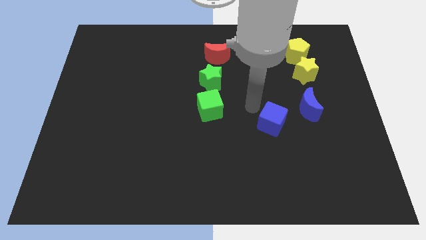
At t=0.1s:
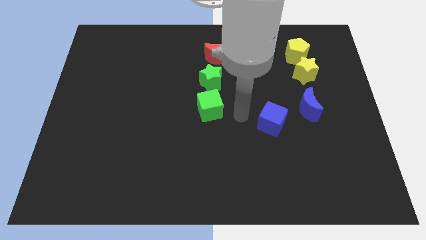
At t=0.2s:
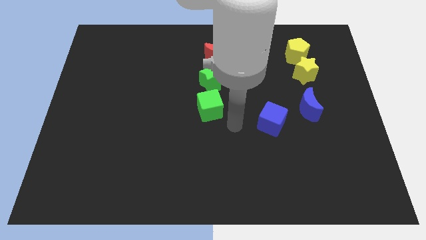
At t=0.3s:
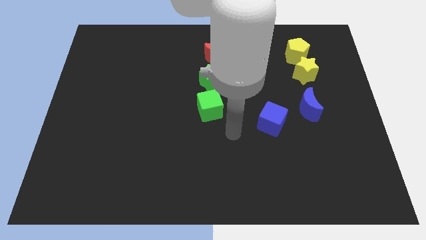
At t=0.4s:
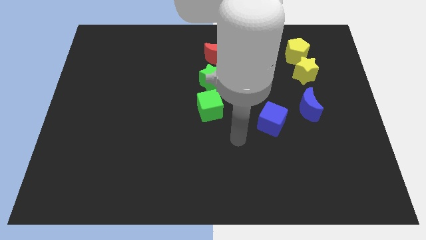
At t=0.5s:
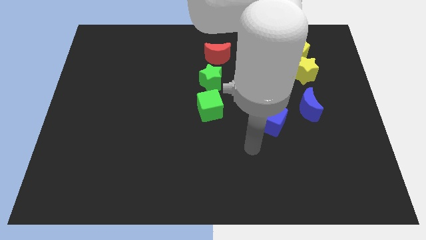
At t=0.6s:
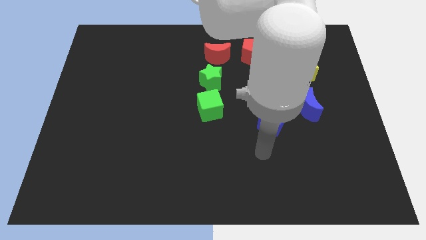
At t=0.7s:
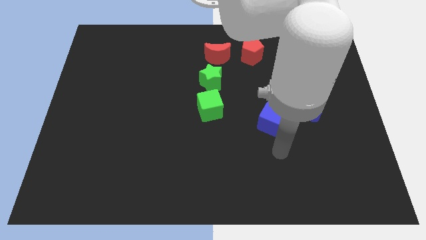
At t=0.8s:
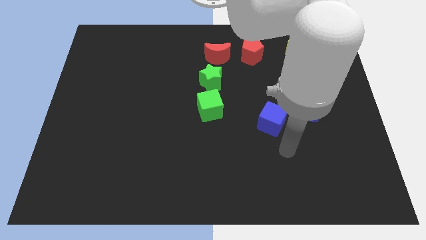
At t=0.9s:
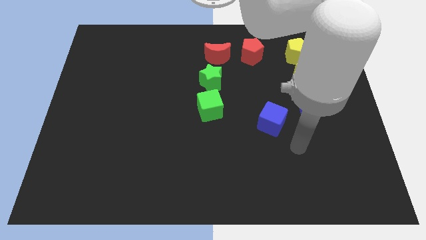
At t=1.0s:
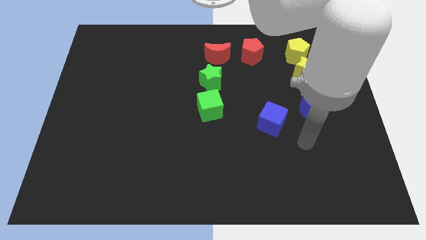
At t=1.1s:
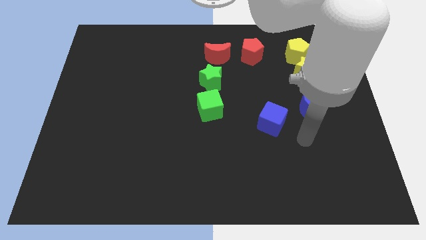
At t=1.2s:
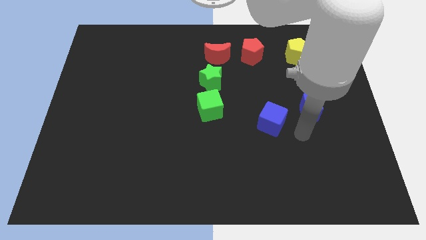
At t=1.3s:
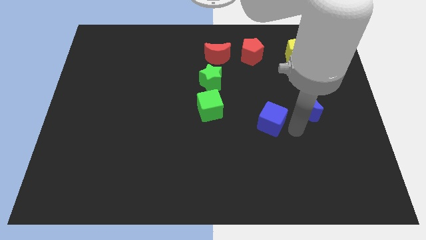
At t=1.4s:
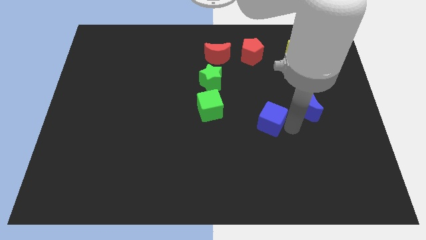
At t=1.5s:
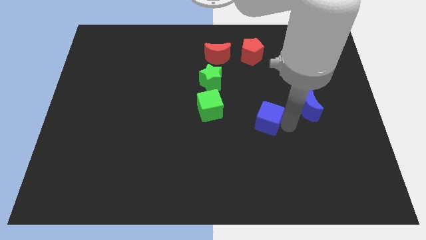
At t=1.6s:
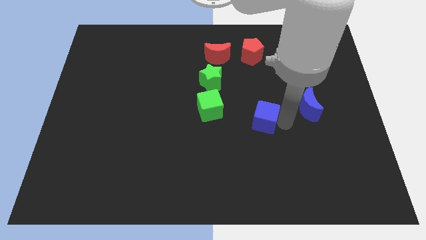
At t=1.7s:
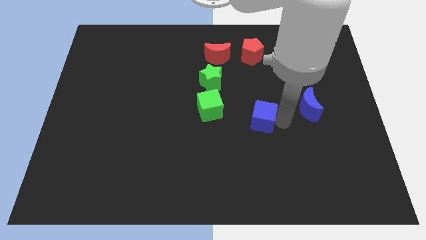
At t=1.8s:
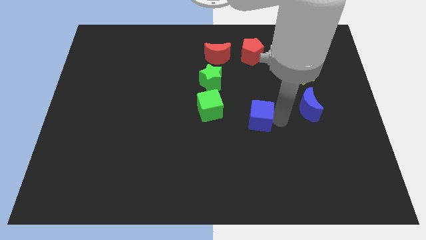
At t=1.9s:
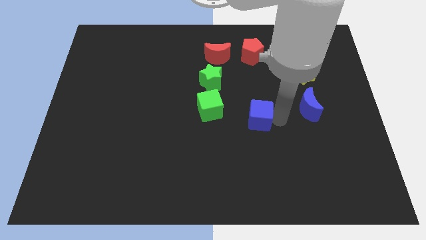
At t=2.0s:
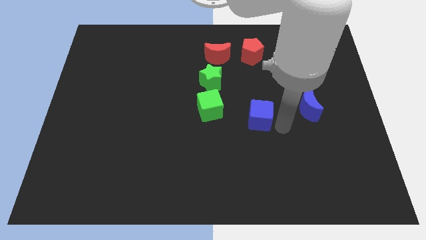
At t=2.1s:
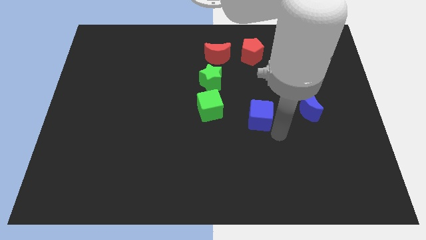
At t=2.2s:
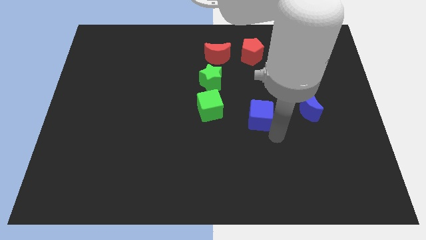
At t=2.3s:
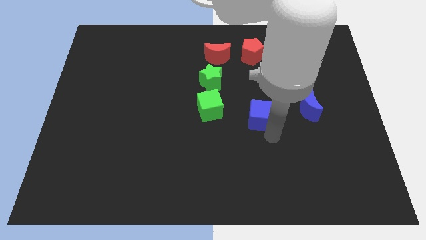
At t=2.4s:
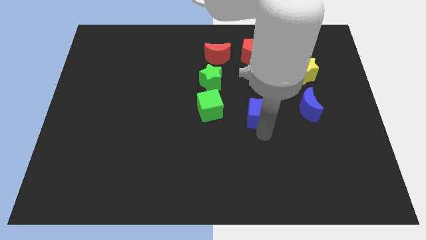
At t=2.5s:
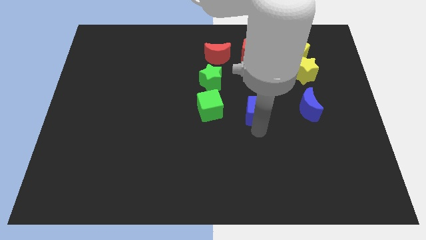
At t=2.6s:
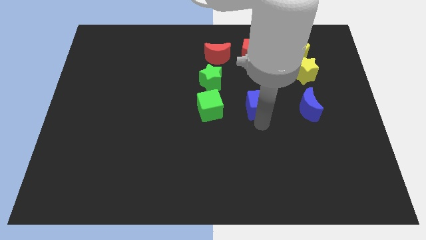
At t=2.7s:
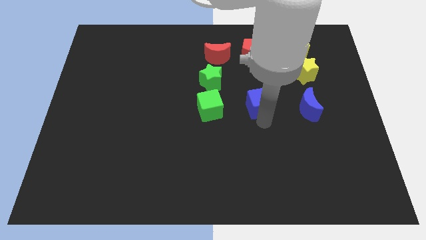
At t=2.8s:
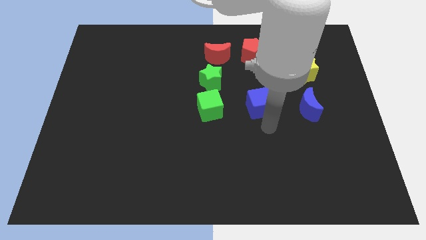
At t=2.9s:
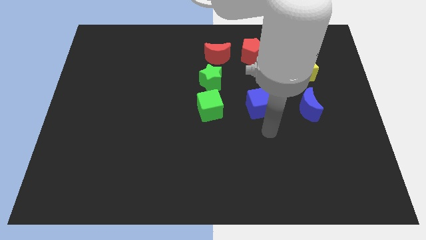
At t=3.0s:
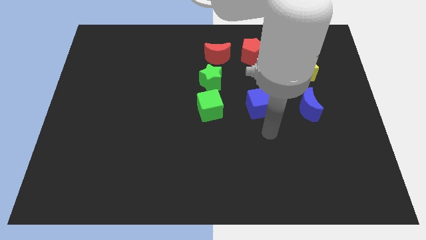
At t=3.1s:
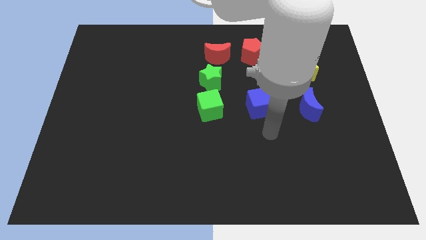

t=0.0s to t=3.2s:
move the blue cube left to the blue moon

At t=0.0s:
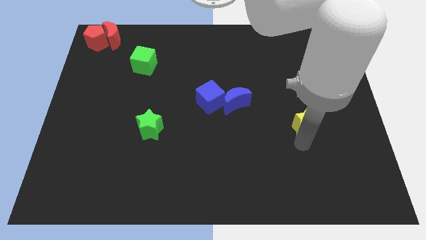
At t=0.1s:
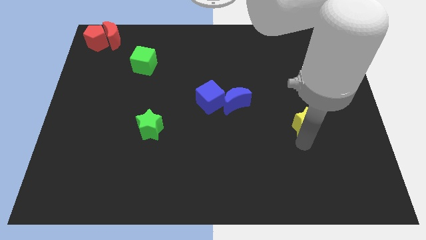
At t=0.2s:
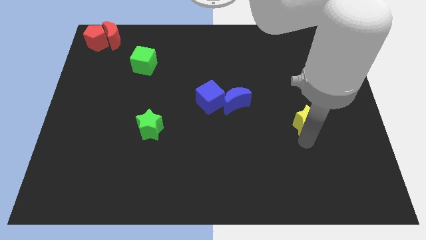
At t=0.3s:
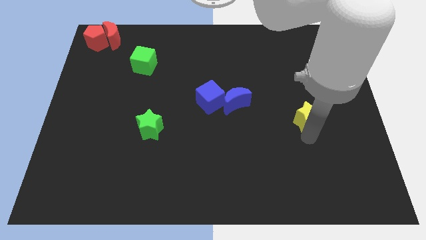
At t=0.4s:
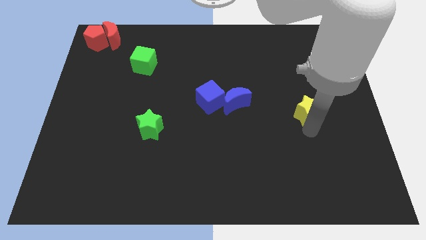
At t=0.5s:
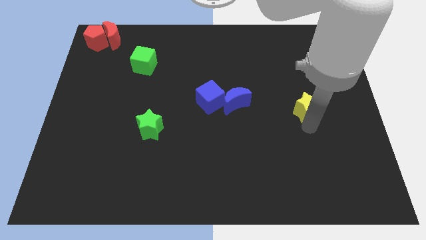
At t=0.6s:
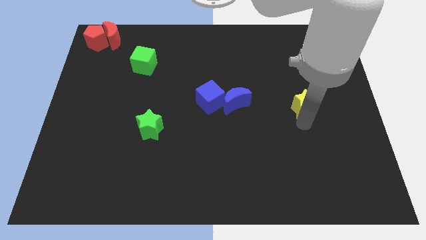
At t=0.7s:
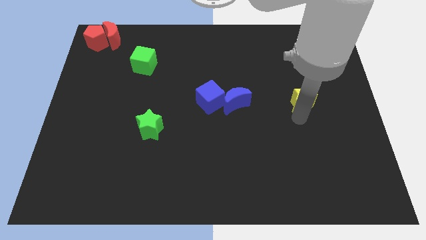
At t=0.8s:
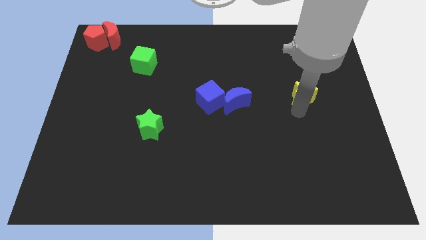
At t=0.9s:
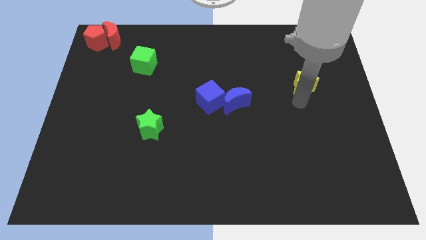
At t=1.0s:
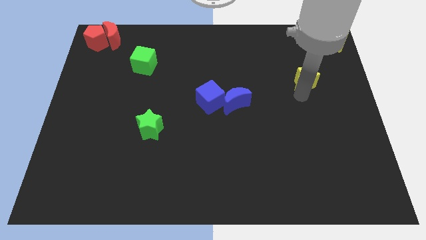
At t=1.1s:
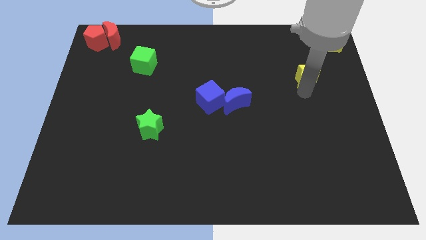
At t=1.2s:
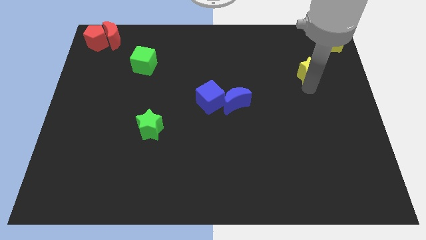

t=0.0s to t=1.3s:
move the yellow star towards the yellow pentagon

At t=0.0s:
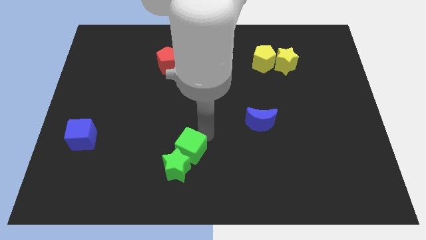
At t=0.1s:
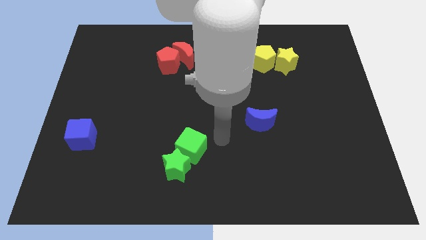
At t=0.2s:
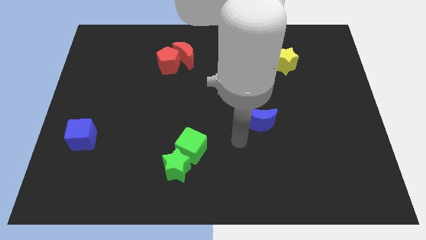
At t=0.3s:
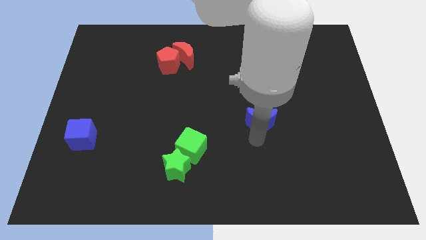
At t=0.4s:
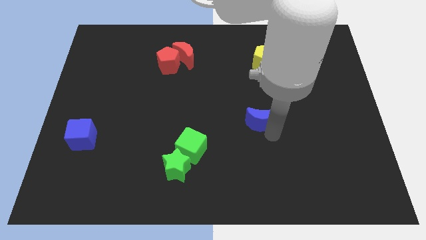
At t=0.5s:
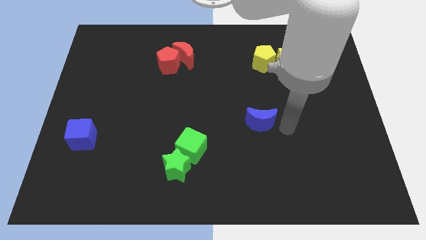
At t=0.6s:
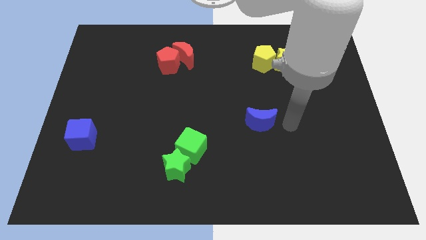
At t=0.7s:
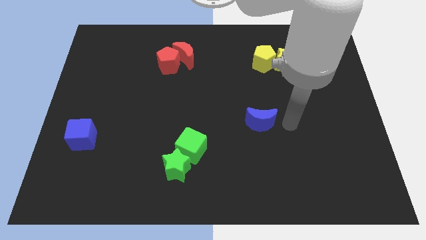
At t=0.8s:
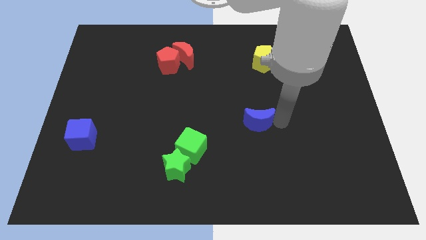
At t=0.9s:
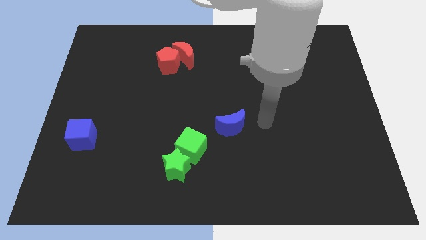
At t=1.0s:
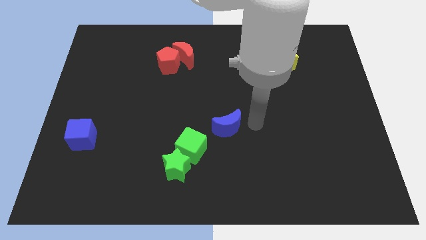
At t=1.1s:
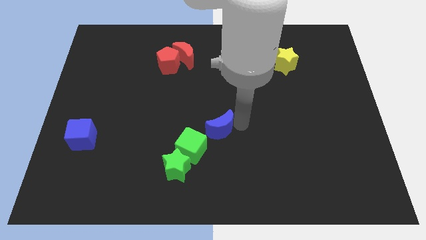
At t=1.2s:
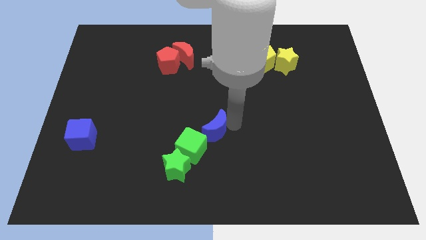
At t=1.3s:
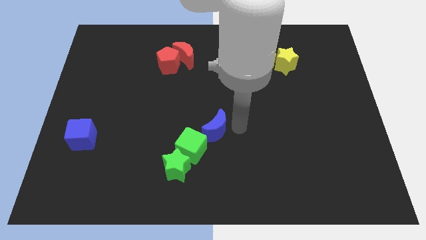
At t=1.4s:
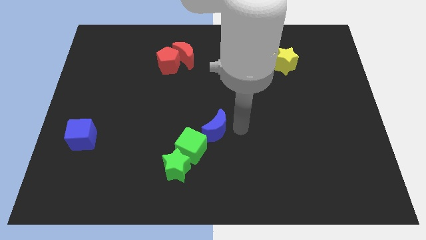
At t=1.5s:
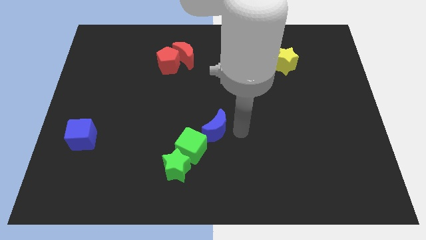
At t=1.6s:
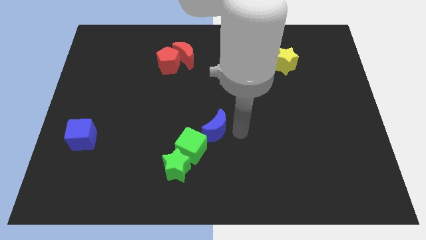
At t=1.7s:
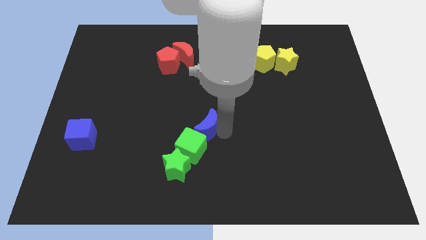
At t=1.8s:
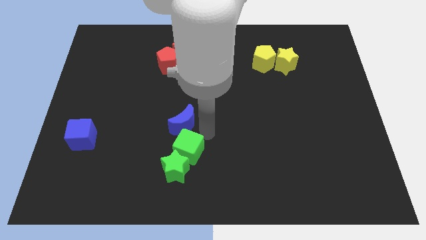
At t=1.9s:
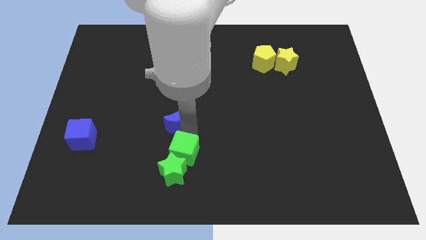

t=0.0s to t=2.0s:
push the blue crescent to the top of the green cube

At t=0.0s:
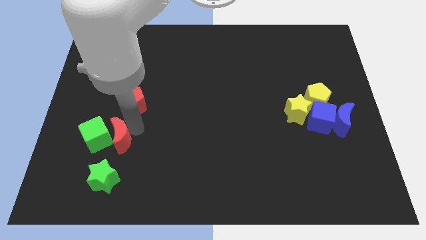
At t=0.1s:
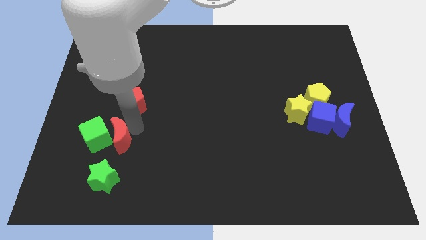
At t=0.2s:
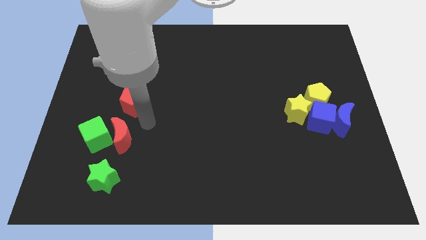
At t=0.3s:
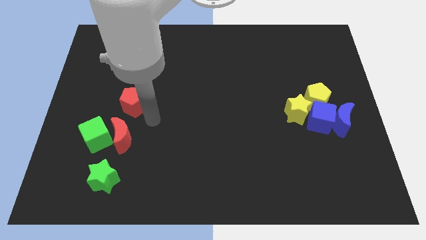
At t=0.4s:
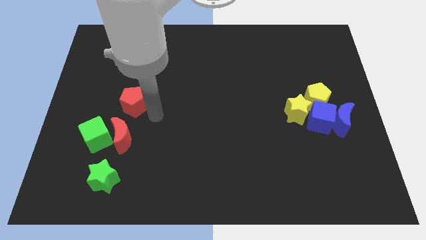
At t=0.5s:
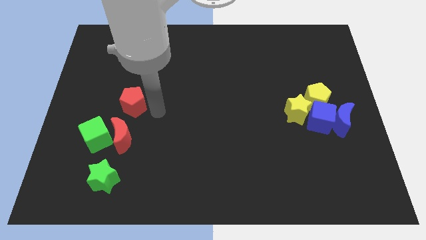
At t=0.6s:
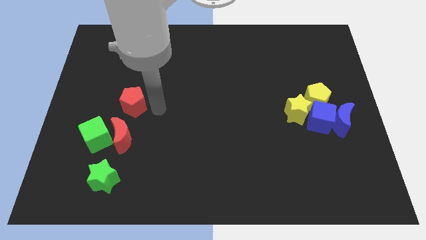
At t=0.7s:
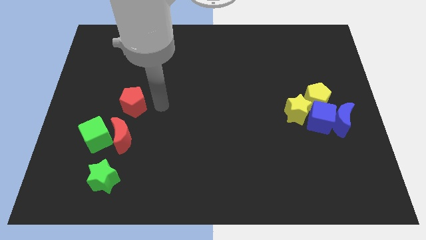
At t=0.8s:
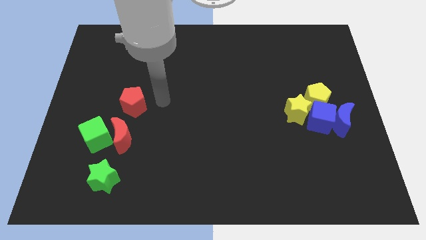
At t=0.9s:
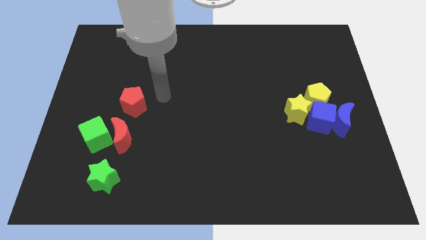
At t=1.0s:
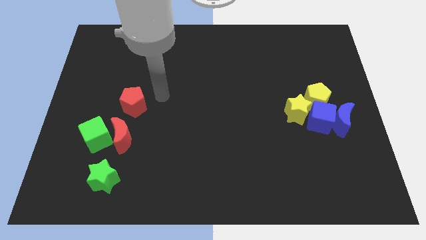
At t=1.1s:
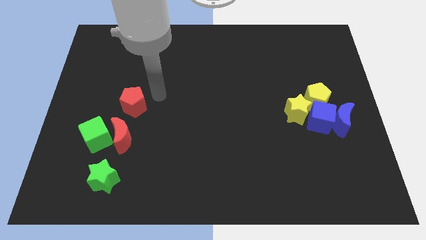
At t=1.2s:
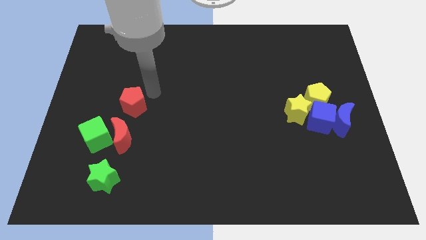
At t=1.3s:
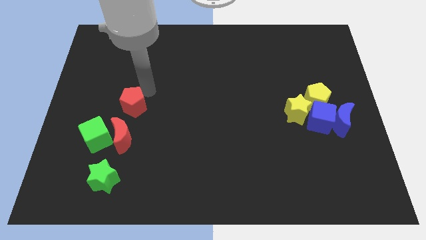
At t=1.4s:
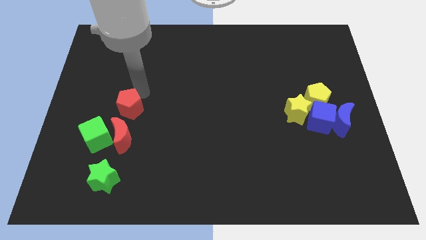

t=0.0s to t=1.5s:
move your hand towards the top of the red pentagon

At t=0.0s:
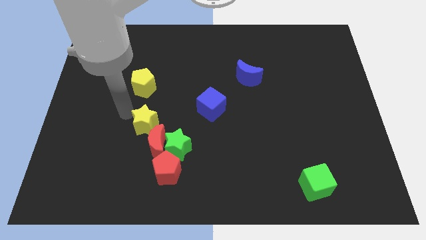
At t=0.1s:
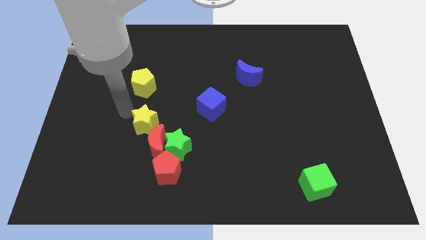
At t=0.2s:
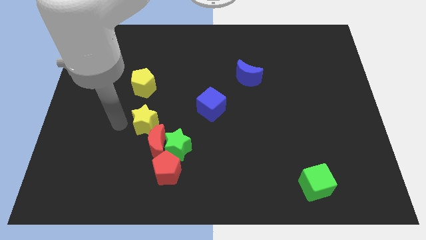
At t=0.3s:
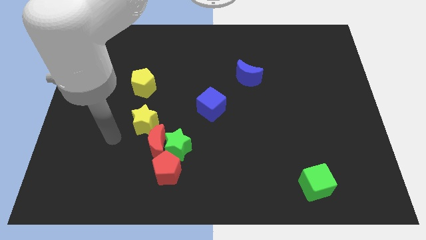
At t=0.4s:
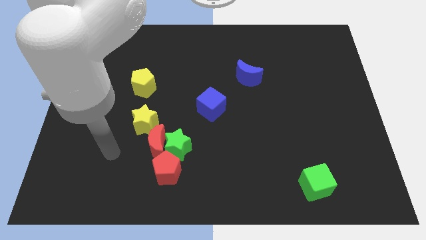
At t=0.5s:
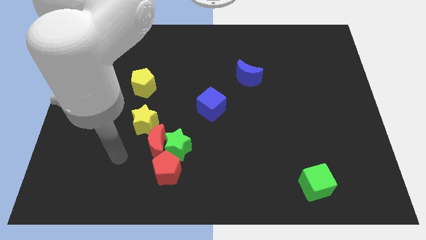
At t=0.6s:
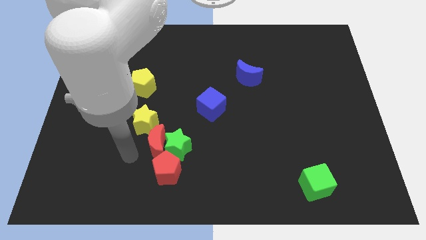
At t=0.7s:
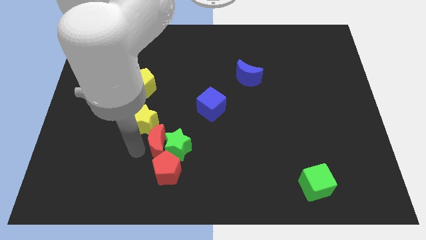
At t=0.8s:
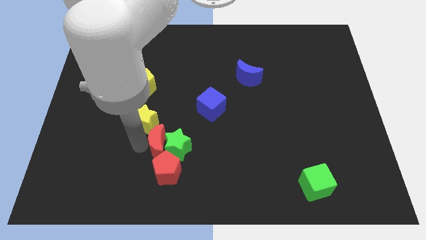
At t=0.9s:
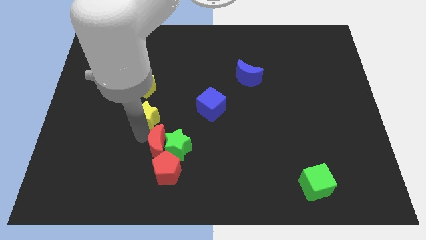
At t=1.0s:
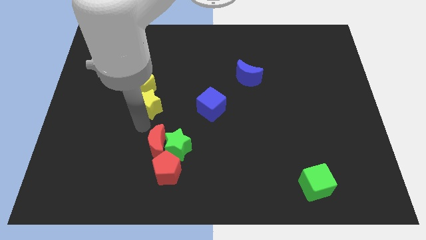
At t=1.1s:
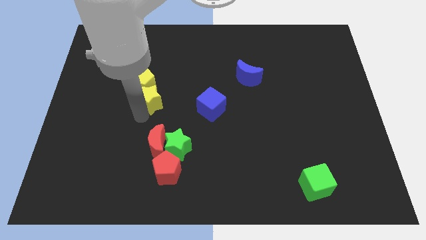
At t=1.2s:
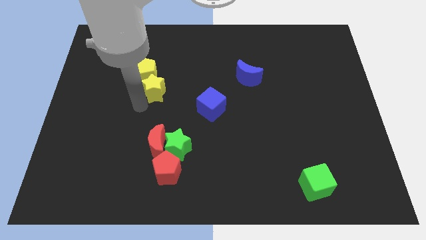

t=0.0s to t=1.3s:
move the yellow star below the yellow pentagon
